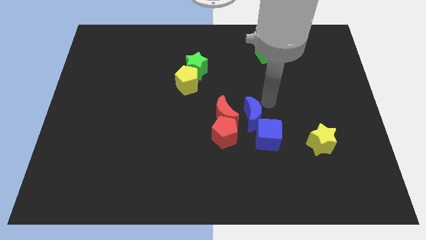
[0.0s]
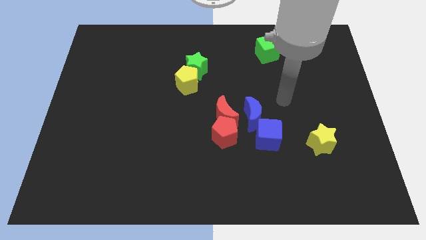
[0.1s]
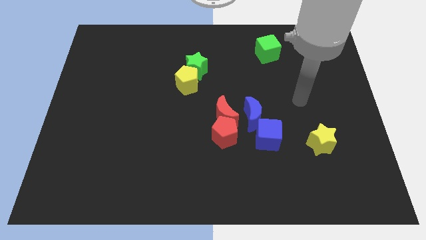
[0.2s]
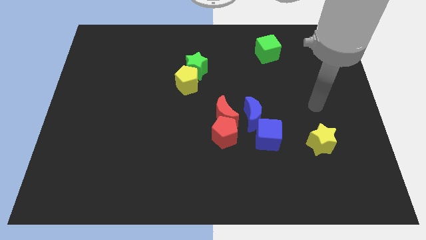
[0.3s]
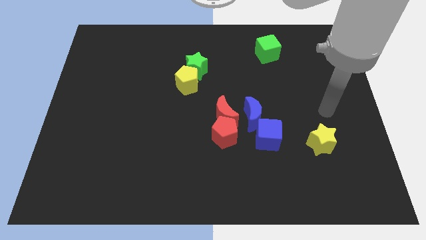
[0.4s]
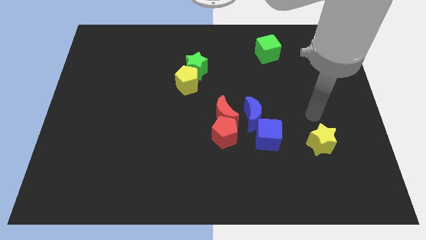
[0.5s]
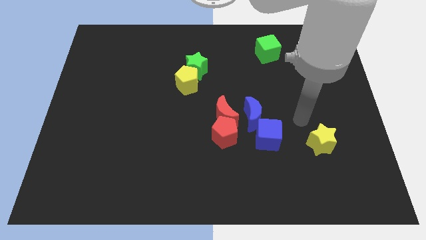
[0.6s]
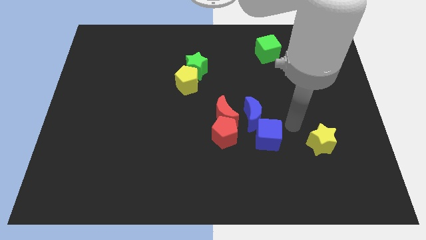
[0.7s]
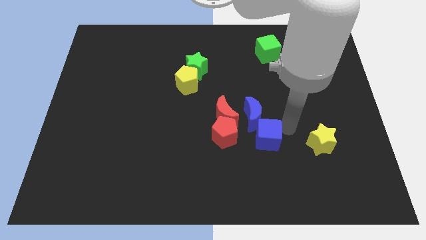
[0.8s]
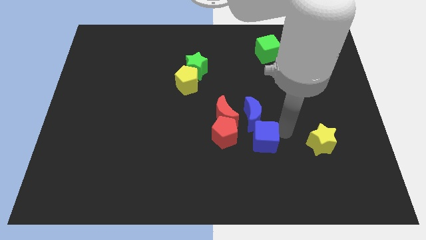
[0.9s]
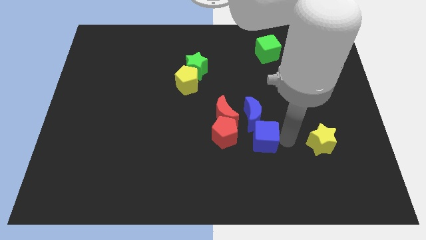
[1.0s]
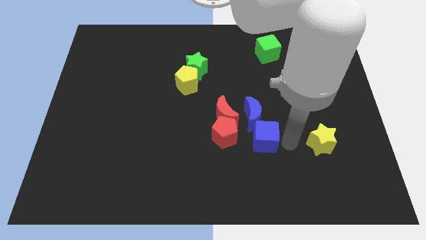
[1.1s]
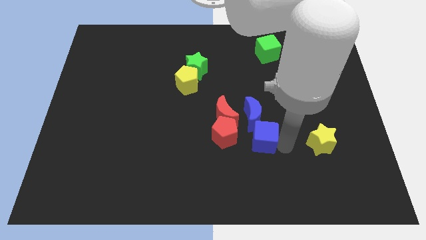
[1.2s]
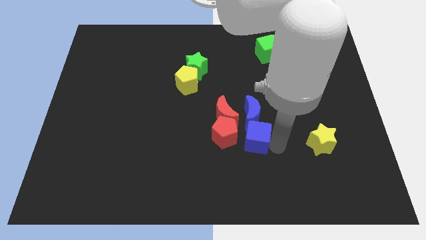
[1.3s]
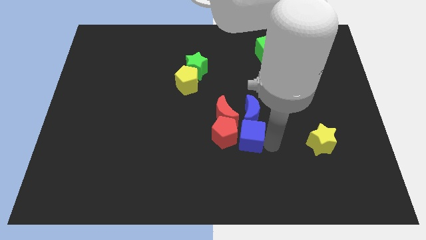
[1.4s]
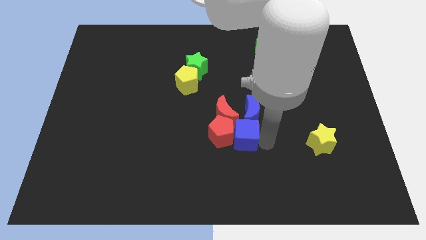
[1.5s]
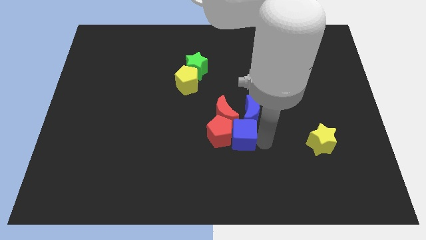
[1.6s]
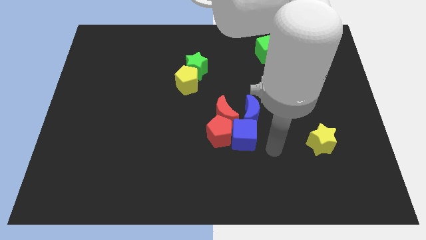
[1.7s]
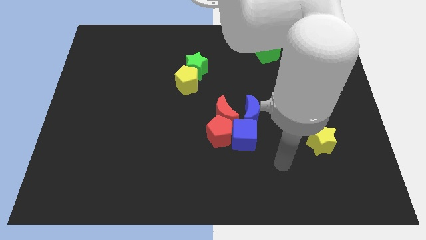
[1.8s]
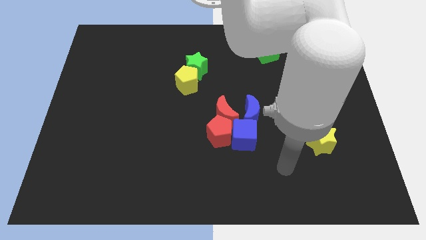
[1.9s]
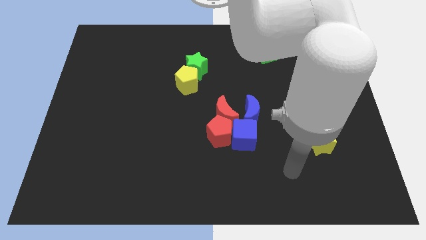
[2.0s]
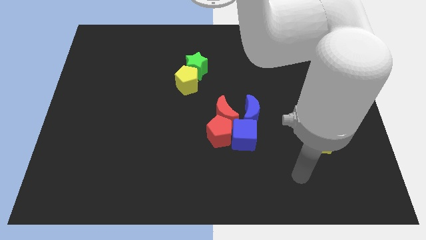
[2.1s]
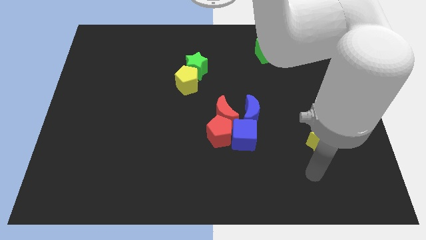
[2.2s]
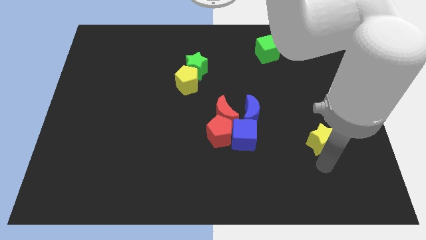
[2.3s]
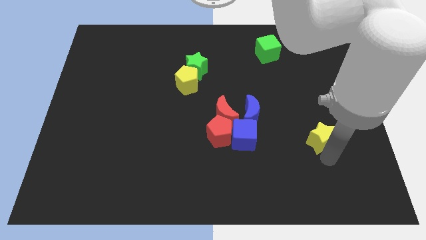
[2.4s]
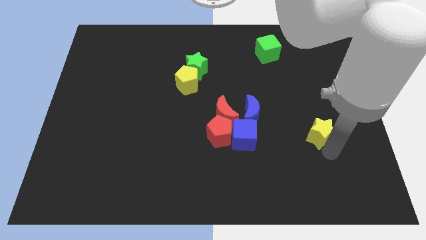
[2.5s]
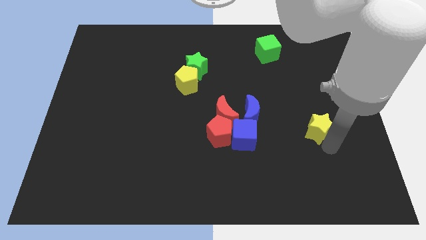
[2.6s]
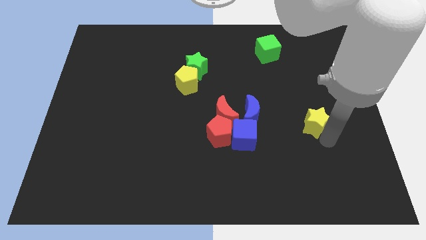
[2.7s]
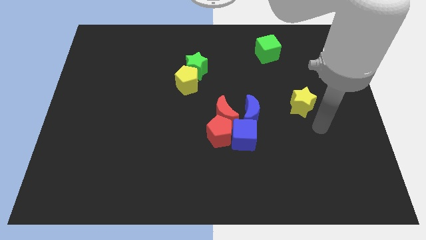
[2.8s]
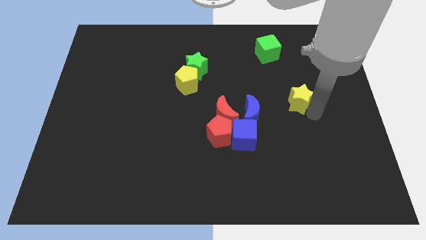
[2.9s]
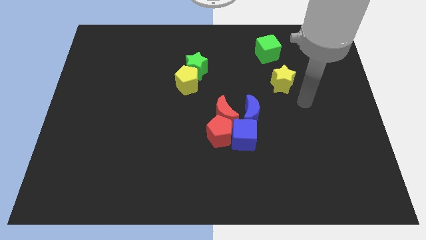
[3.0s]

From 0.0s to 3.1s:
move yellow star slightly upwards

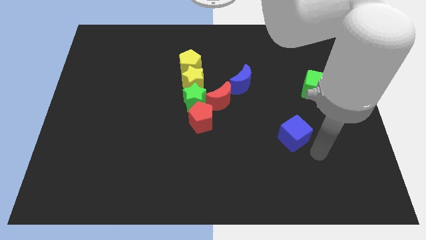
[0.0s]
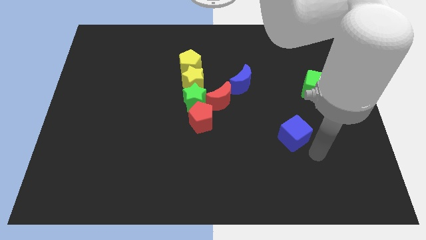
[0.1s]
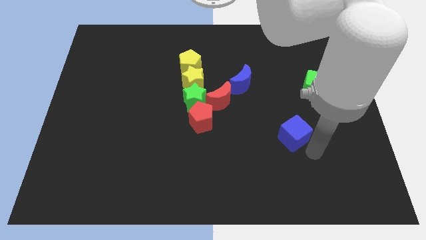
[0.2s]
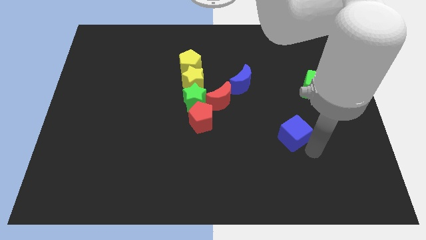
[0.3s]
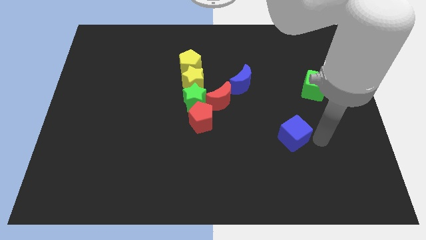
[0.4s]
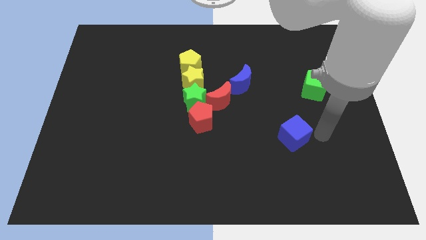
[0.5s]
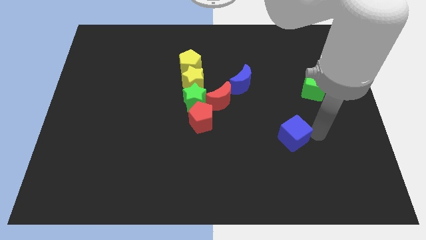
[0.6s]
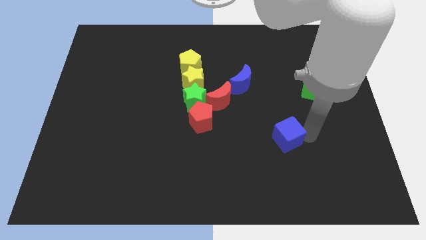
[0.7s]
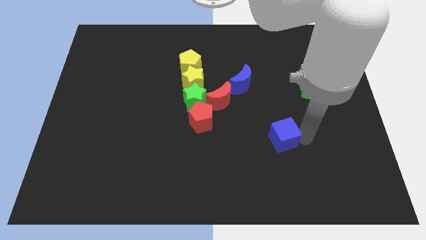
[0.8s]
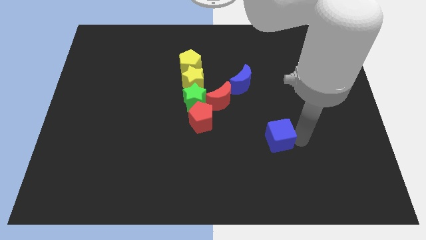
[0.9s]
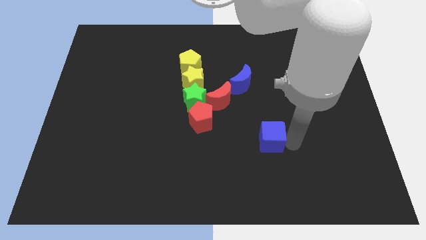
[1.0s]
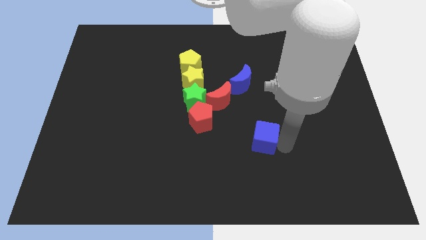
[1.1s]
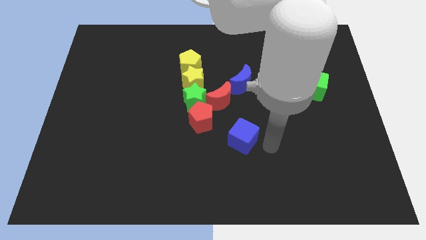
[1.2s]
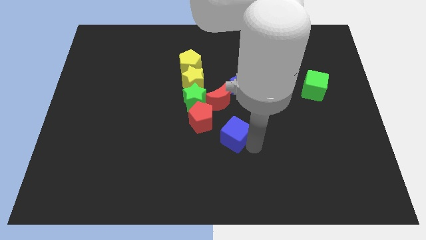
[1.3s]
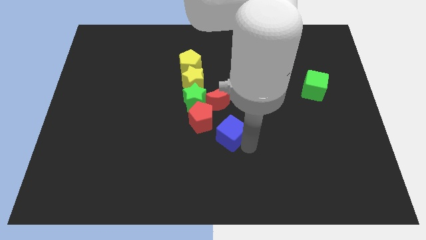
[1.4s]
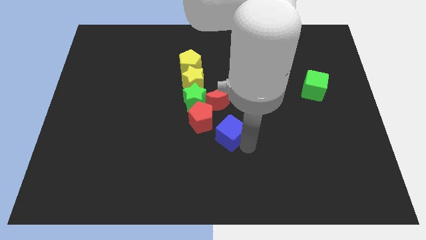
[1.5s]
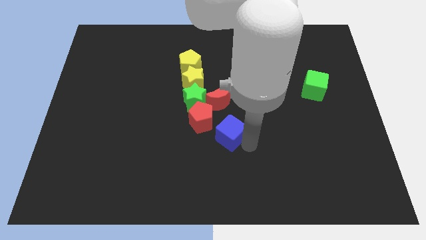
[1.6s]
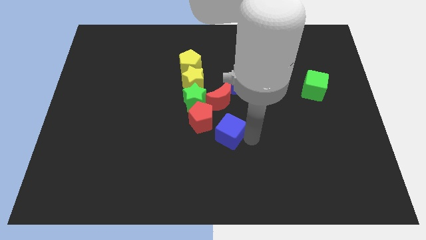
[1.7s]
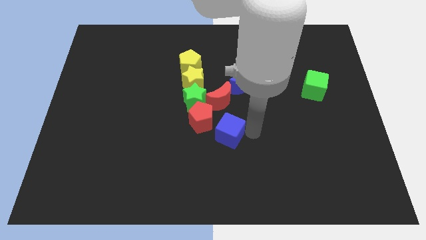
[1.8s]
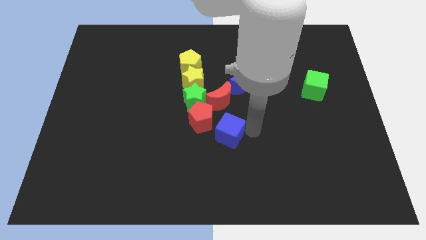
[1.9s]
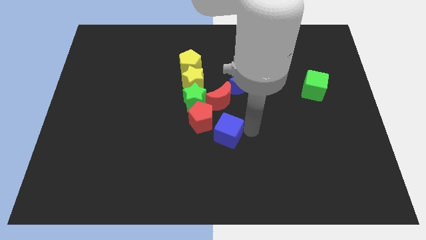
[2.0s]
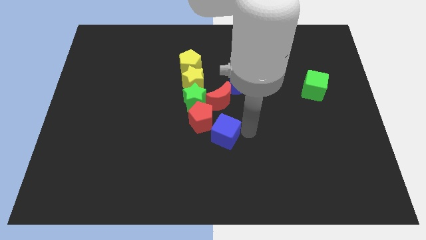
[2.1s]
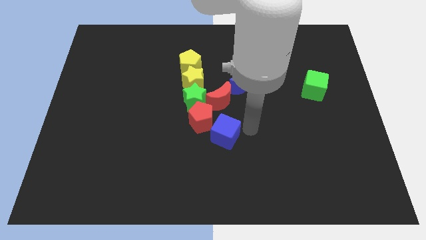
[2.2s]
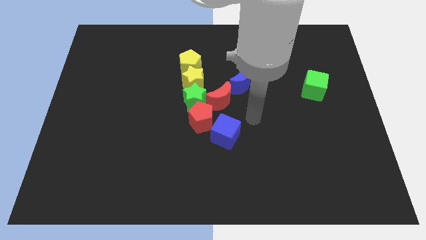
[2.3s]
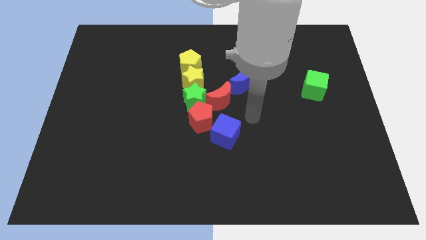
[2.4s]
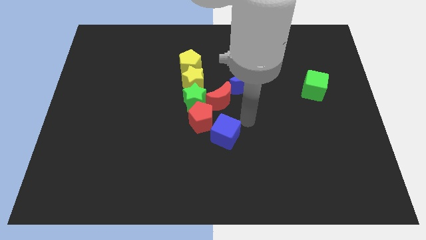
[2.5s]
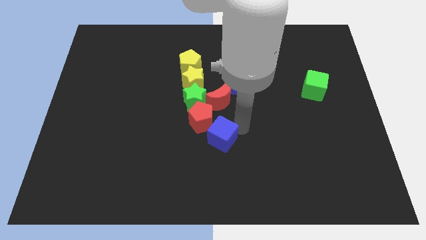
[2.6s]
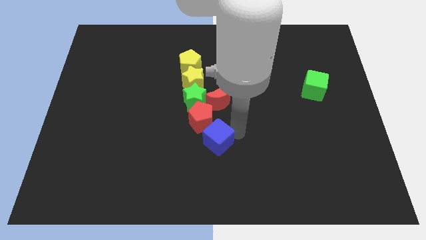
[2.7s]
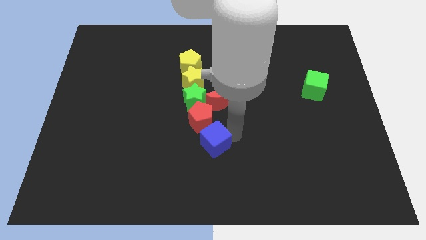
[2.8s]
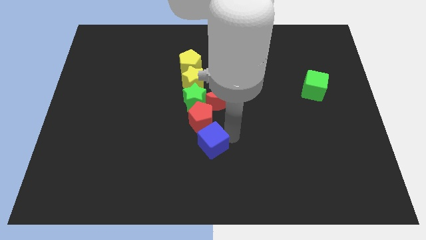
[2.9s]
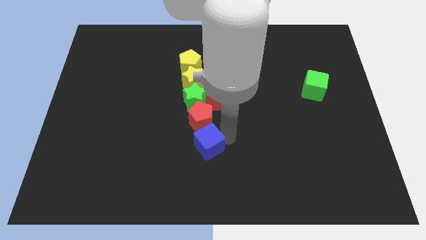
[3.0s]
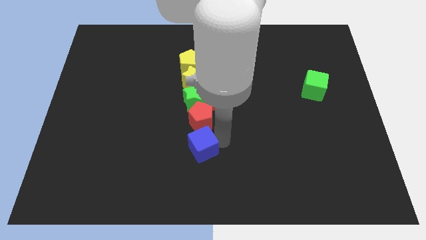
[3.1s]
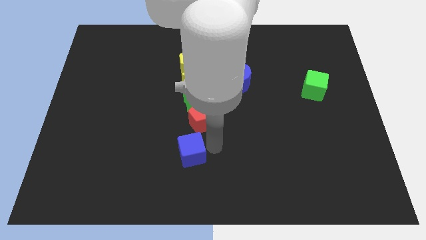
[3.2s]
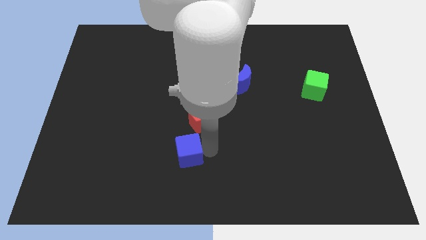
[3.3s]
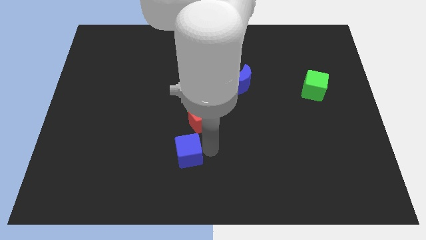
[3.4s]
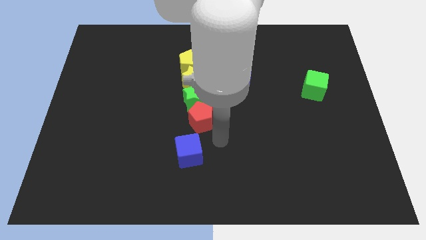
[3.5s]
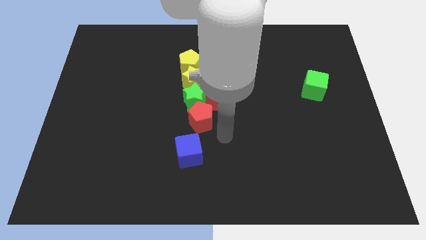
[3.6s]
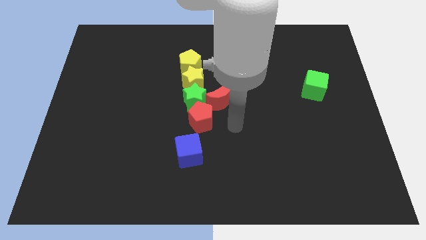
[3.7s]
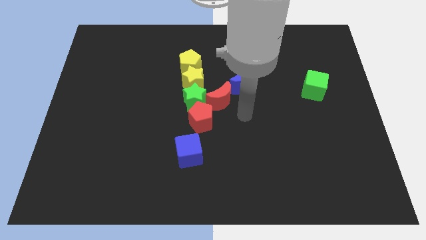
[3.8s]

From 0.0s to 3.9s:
place the blue cube at the bottom left side of red pentagon

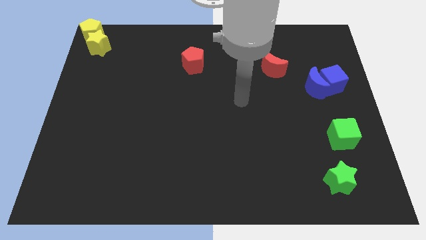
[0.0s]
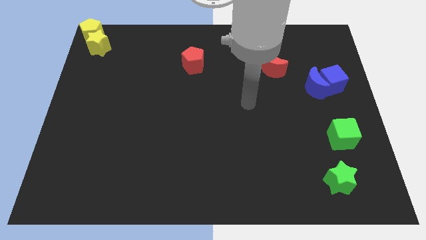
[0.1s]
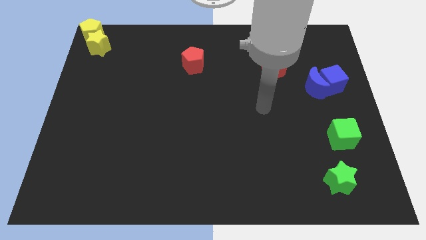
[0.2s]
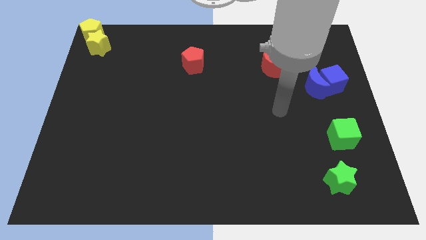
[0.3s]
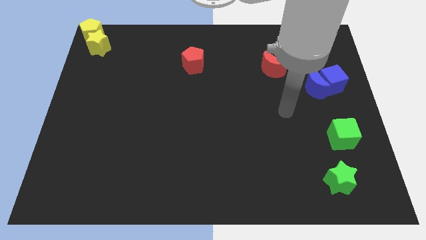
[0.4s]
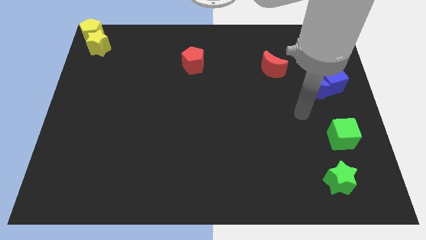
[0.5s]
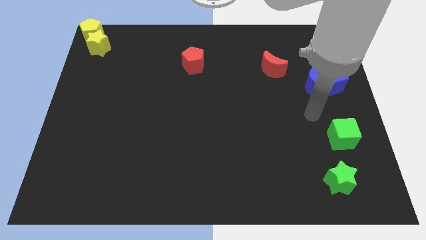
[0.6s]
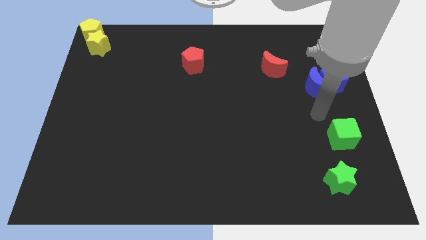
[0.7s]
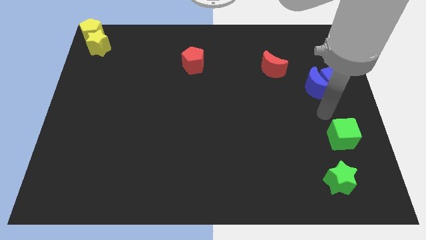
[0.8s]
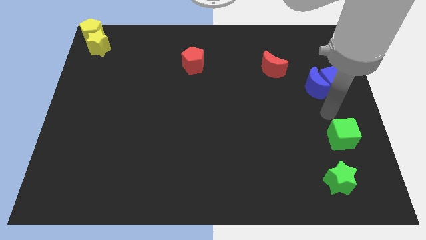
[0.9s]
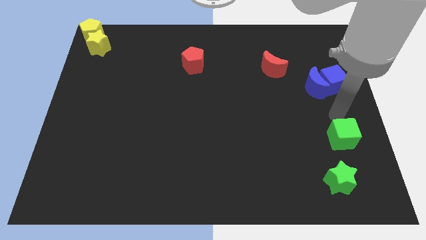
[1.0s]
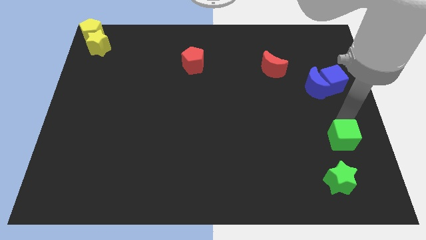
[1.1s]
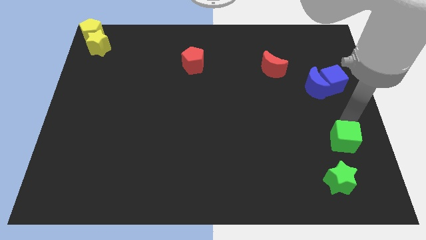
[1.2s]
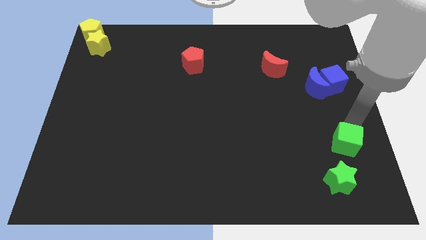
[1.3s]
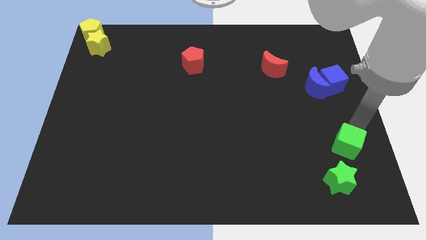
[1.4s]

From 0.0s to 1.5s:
tap the green cube

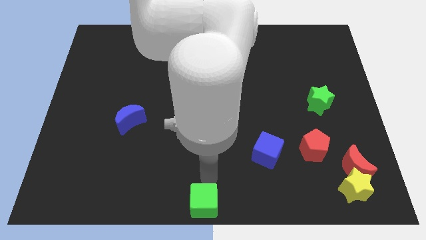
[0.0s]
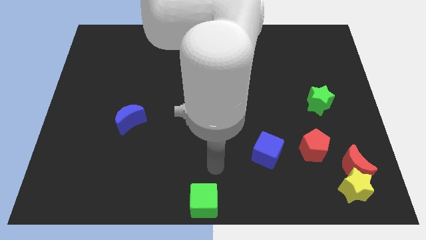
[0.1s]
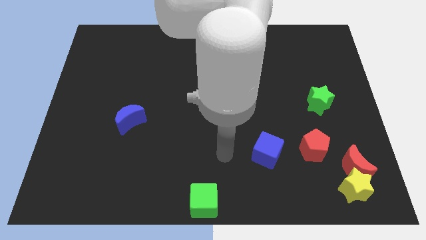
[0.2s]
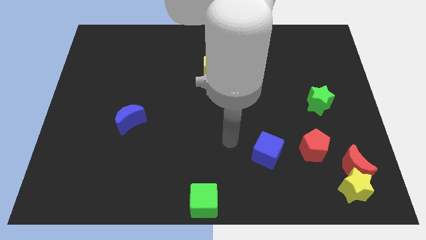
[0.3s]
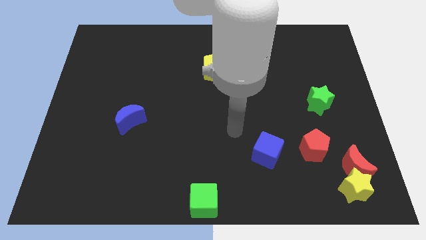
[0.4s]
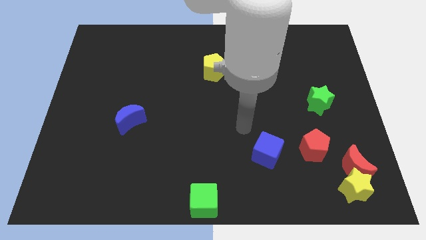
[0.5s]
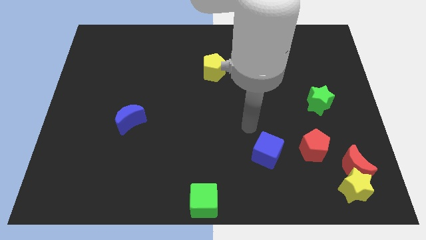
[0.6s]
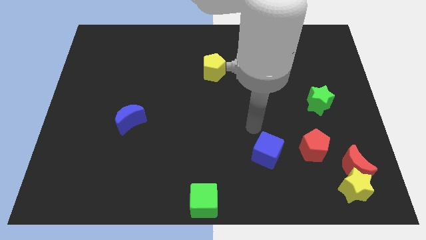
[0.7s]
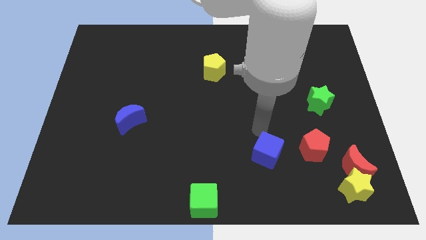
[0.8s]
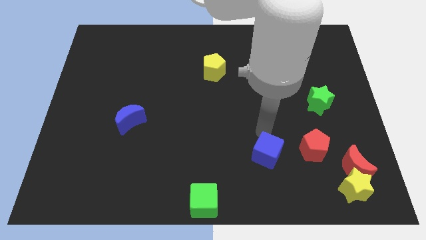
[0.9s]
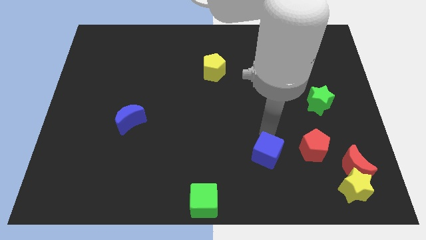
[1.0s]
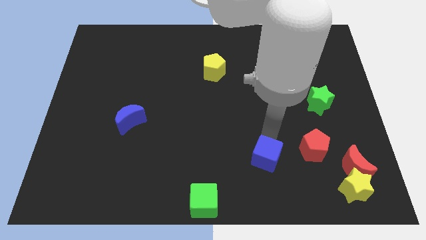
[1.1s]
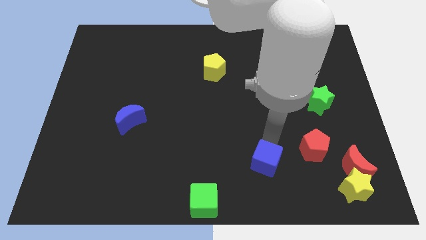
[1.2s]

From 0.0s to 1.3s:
move your arm to the top of the blue cube
